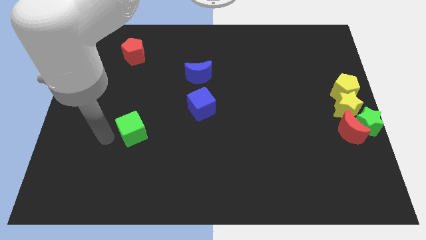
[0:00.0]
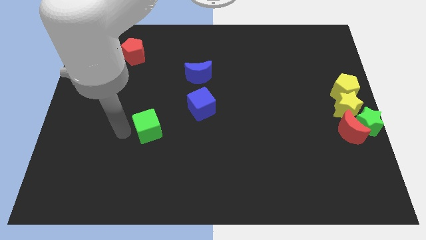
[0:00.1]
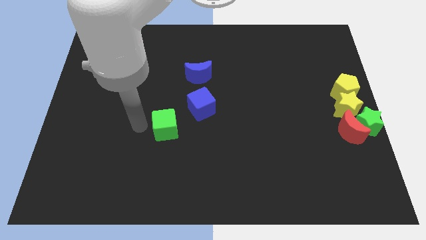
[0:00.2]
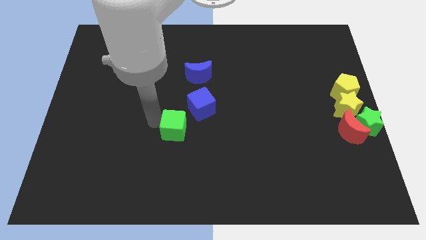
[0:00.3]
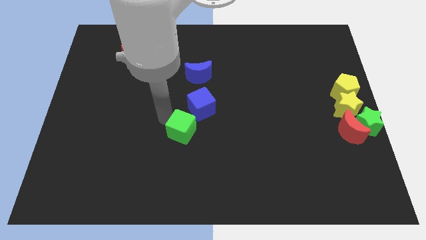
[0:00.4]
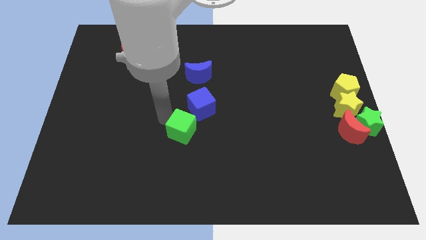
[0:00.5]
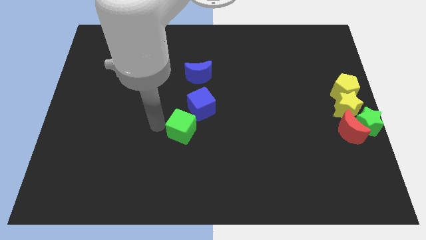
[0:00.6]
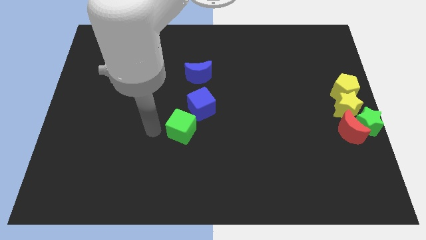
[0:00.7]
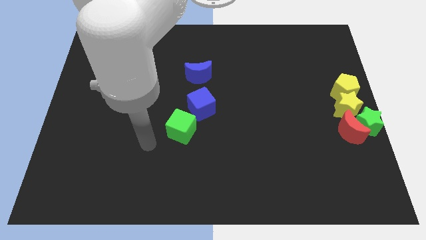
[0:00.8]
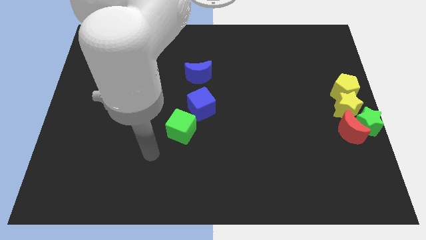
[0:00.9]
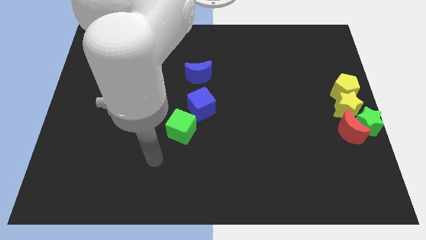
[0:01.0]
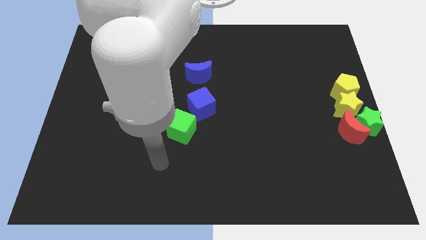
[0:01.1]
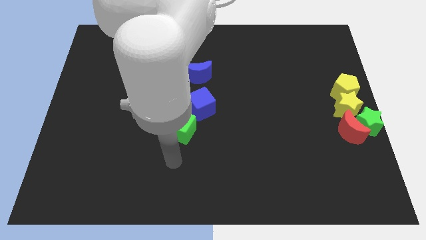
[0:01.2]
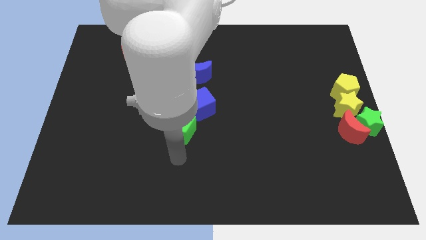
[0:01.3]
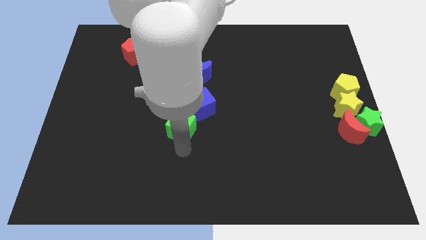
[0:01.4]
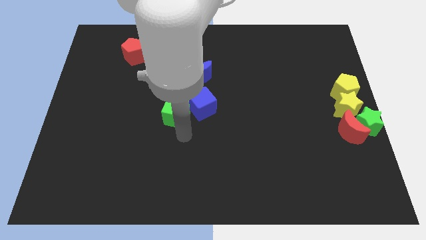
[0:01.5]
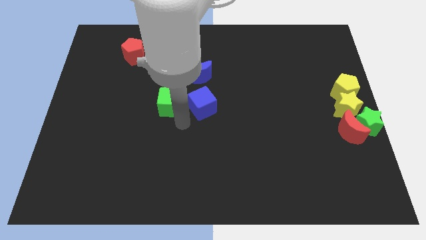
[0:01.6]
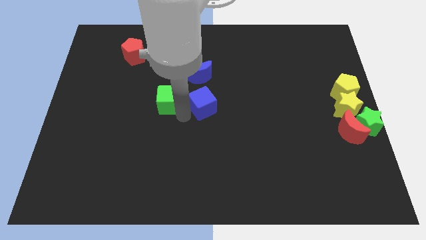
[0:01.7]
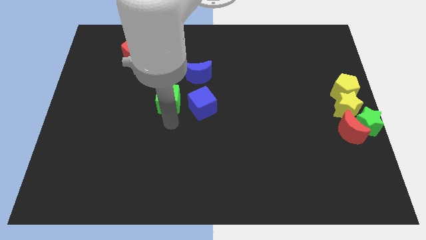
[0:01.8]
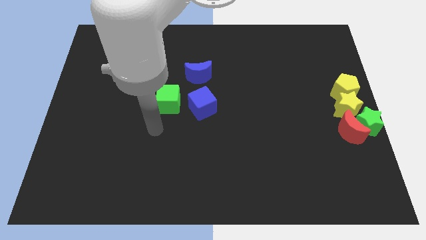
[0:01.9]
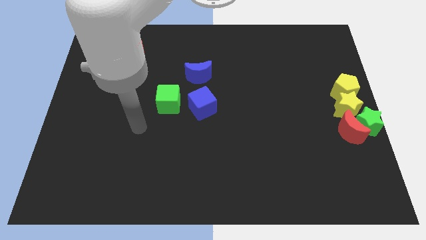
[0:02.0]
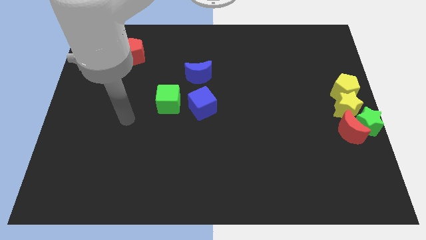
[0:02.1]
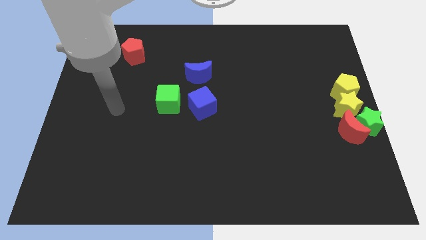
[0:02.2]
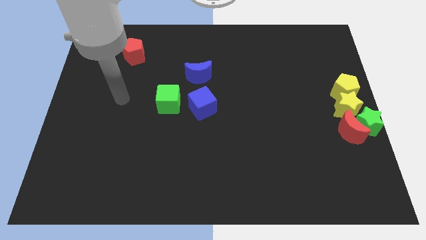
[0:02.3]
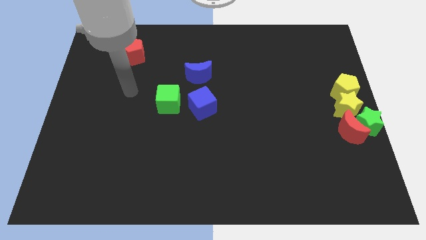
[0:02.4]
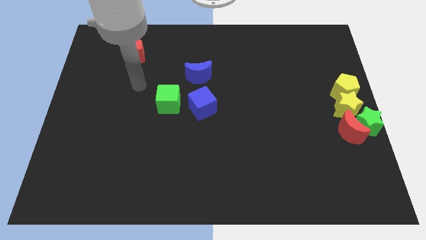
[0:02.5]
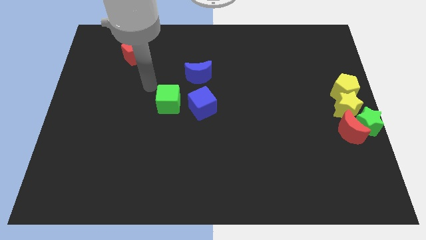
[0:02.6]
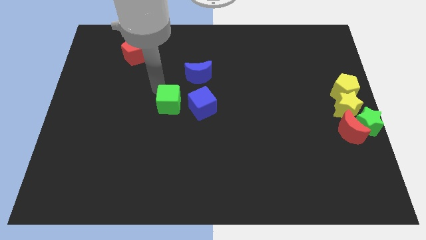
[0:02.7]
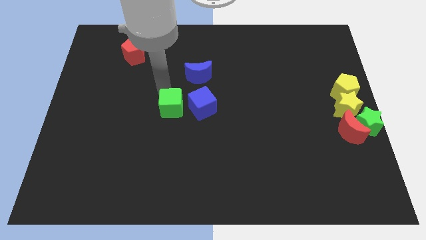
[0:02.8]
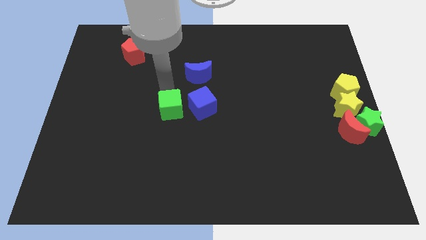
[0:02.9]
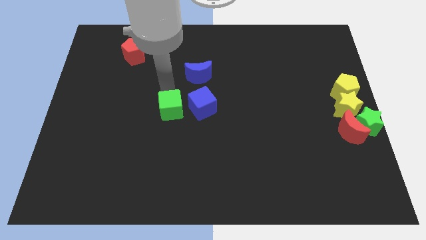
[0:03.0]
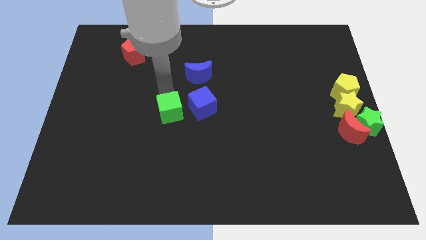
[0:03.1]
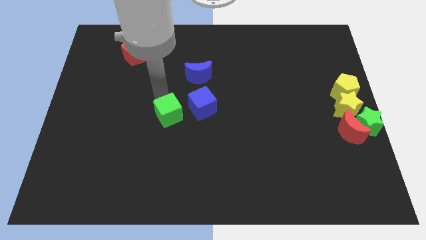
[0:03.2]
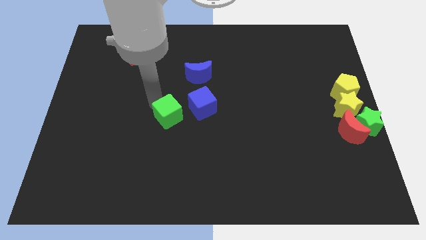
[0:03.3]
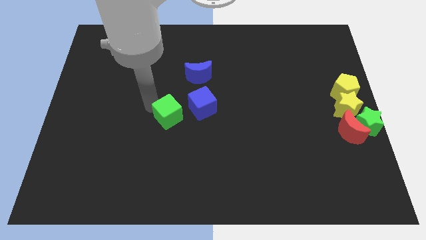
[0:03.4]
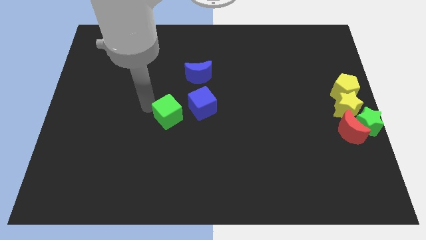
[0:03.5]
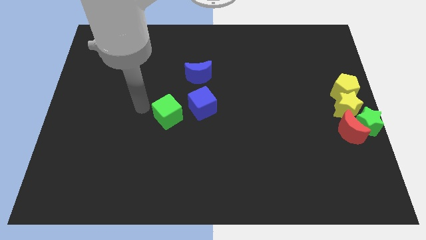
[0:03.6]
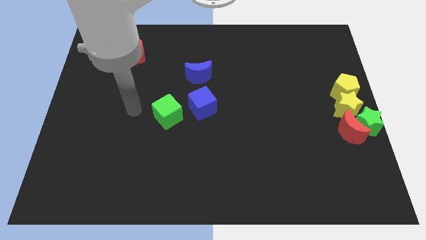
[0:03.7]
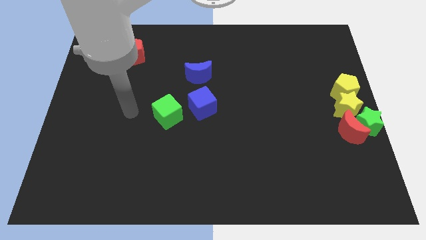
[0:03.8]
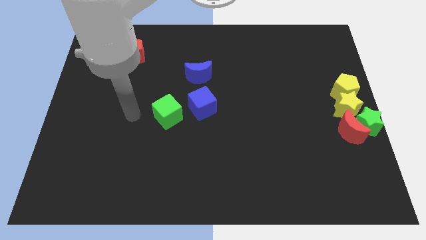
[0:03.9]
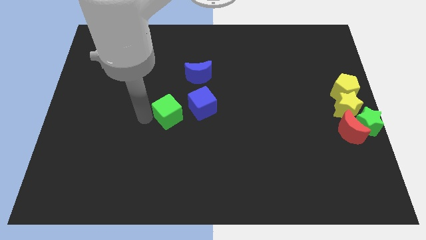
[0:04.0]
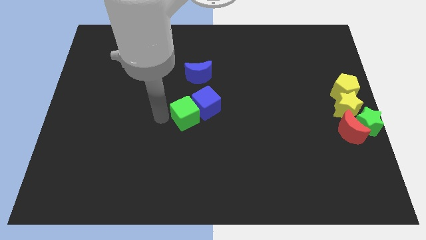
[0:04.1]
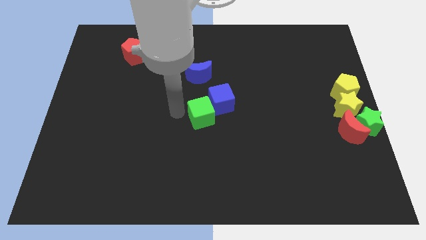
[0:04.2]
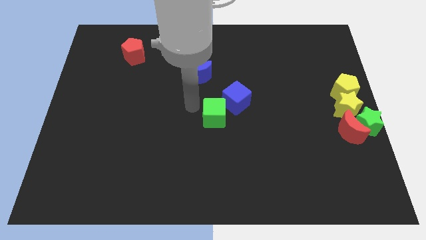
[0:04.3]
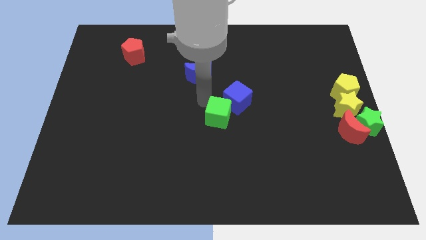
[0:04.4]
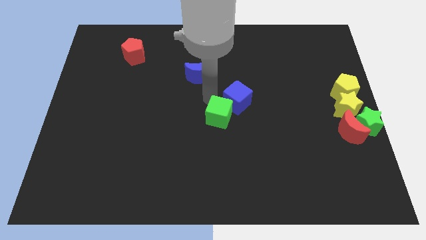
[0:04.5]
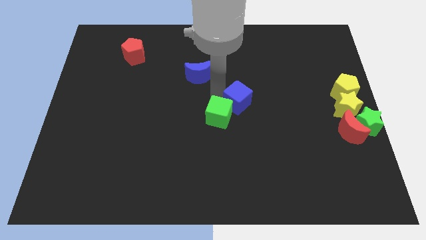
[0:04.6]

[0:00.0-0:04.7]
move green cube to right

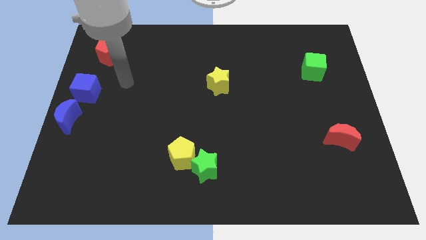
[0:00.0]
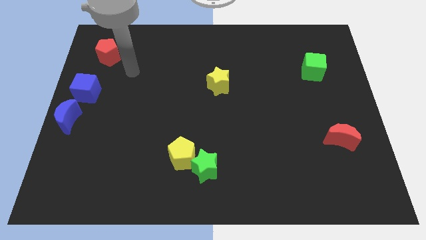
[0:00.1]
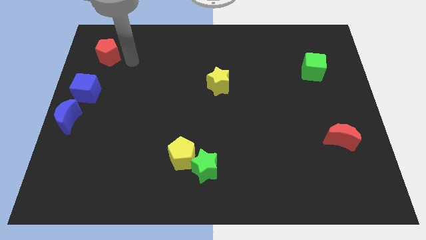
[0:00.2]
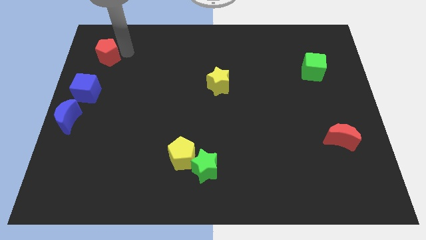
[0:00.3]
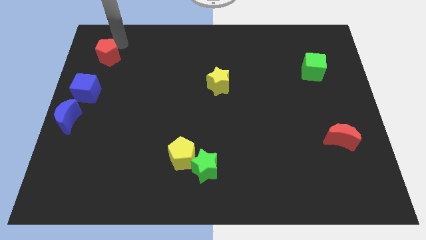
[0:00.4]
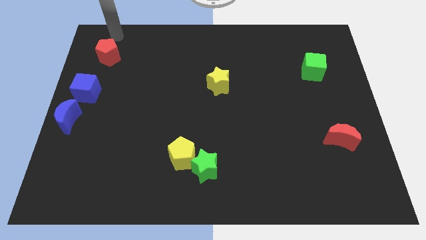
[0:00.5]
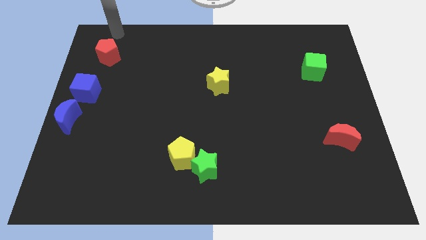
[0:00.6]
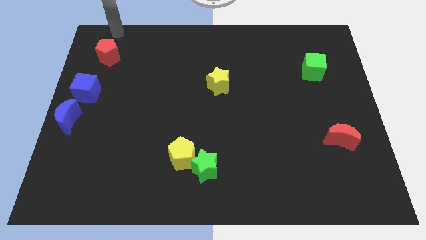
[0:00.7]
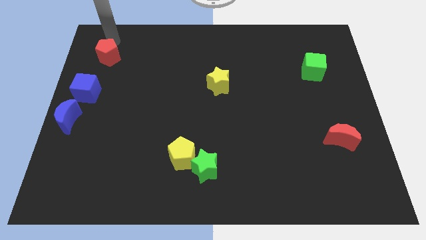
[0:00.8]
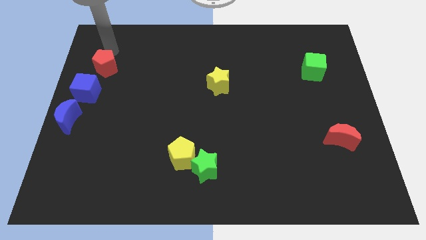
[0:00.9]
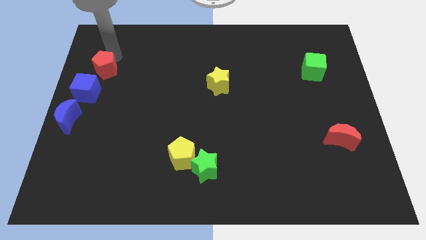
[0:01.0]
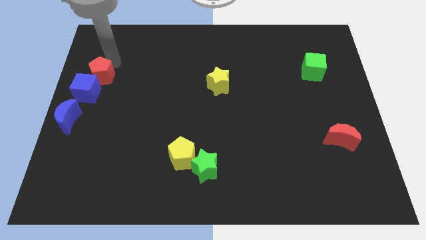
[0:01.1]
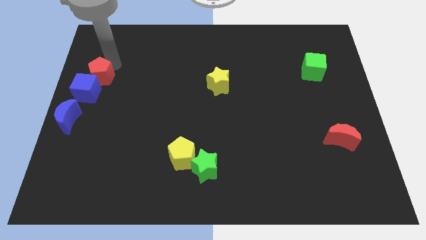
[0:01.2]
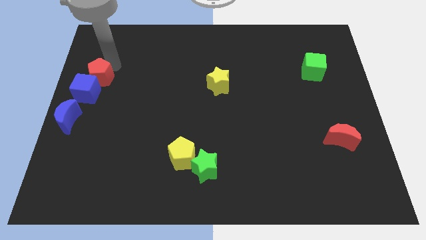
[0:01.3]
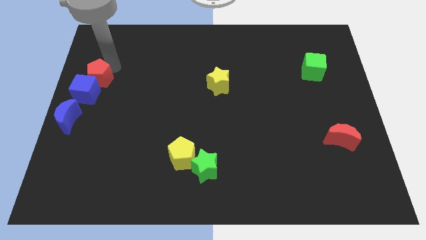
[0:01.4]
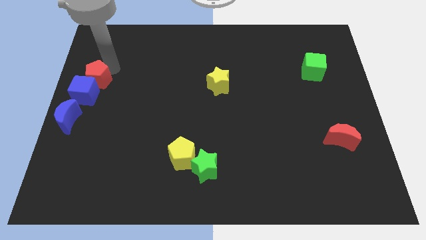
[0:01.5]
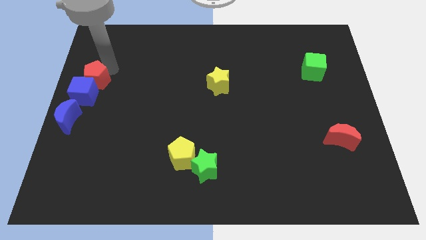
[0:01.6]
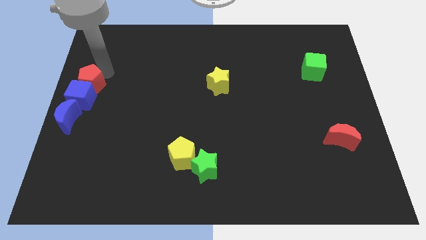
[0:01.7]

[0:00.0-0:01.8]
move the red pentagon into the top side of the blue cube

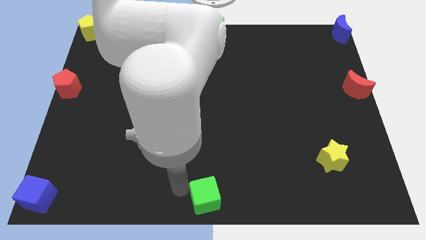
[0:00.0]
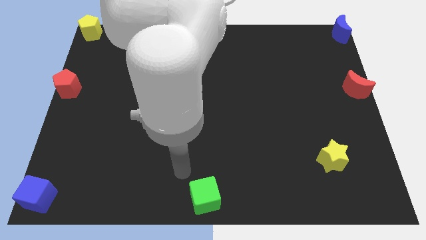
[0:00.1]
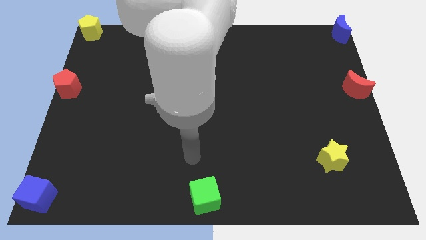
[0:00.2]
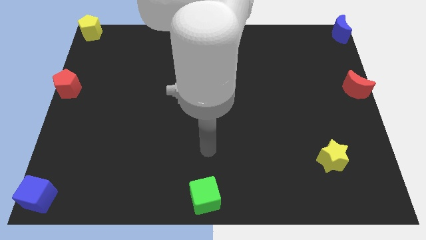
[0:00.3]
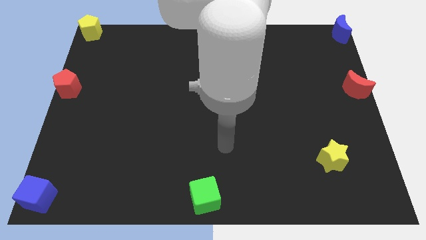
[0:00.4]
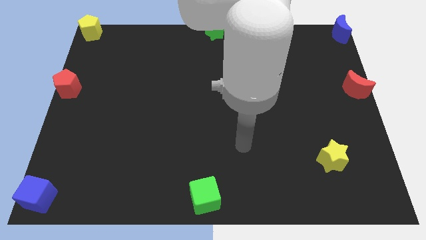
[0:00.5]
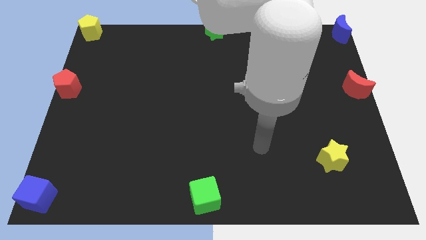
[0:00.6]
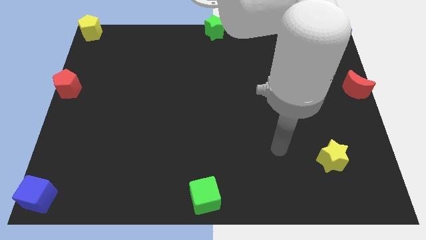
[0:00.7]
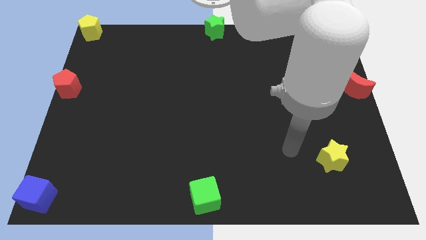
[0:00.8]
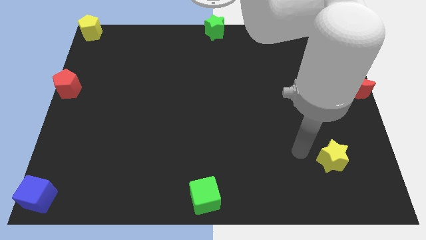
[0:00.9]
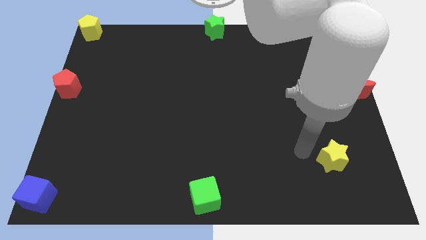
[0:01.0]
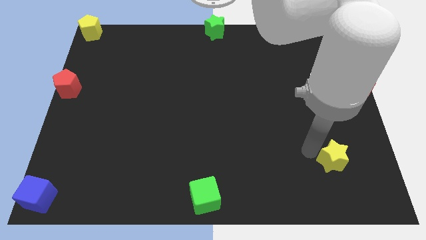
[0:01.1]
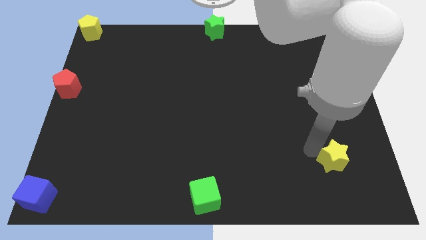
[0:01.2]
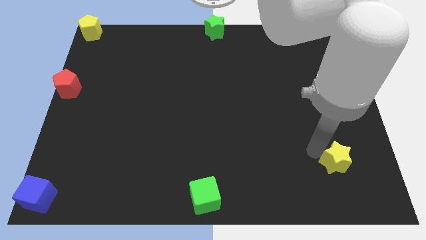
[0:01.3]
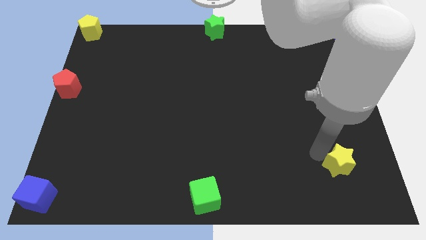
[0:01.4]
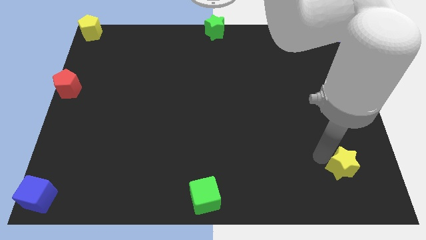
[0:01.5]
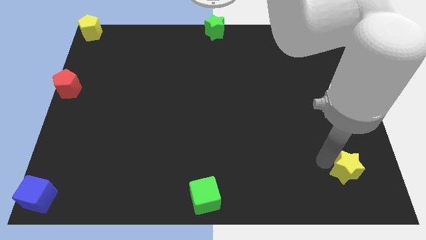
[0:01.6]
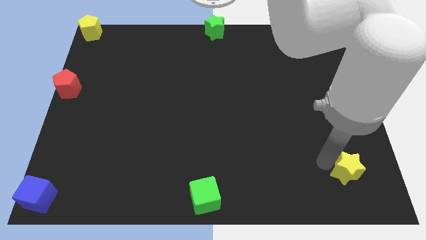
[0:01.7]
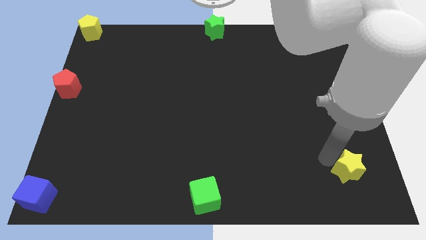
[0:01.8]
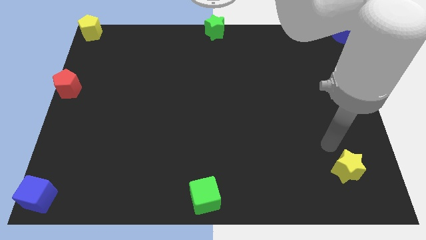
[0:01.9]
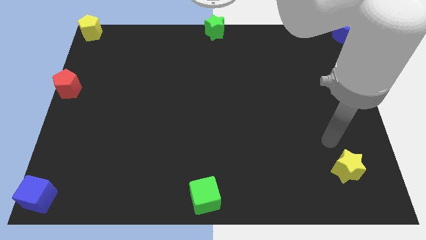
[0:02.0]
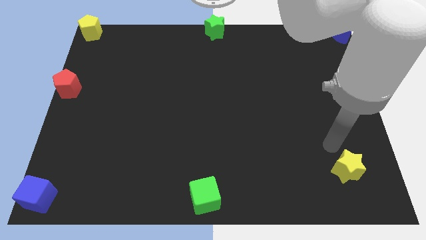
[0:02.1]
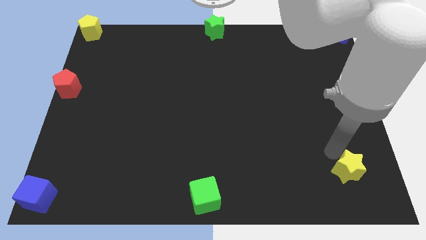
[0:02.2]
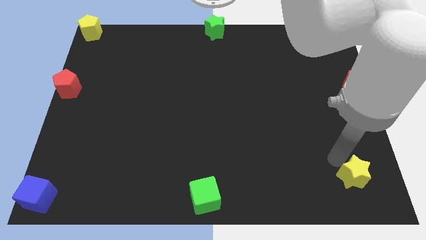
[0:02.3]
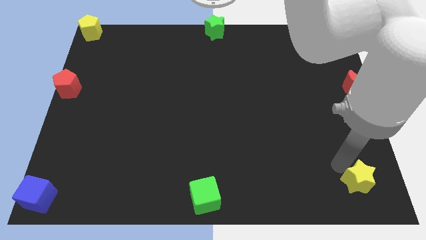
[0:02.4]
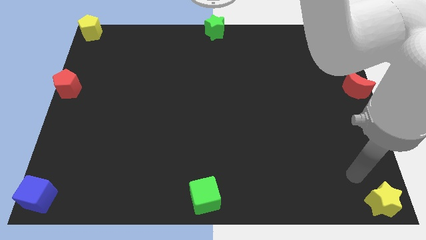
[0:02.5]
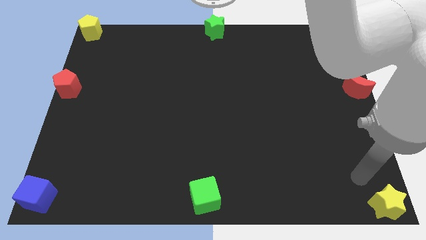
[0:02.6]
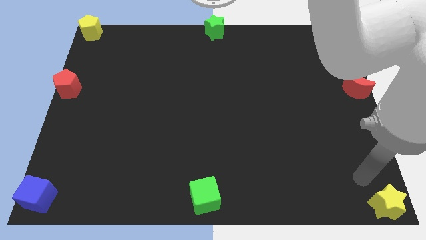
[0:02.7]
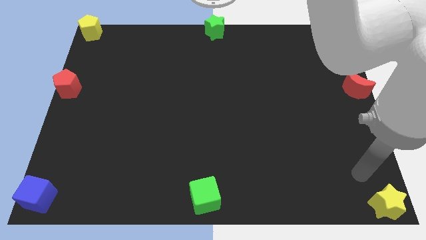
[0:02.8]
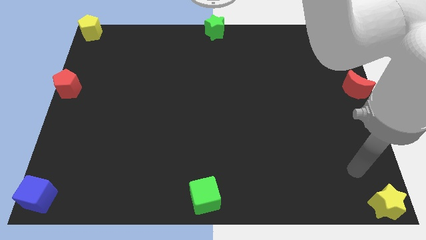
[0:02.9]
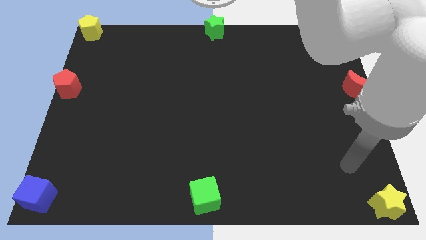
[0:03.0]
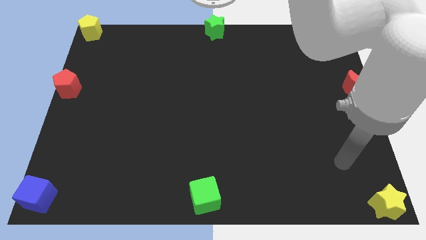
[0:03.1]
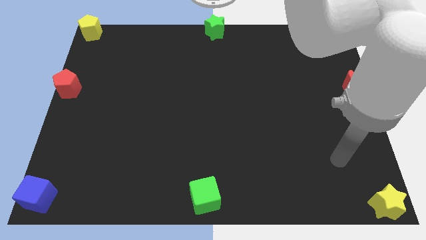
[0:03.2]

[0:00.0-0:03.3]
move the yellow star to the bottom right corner
